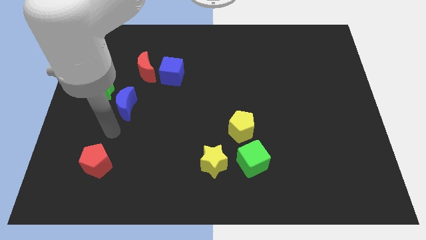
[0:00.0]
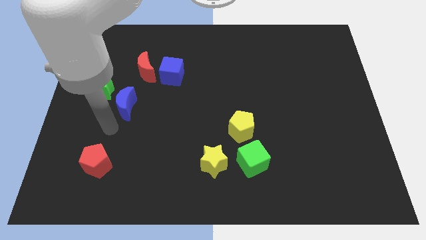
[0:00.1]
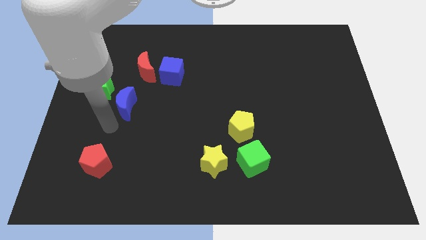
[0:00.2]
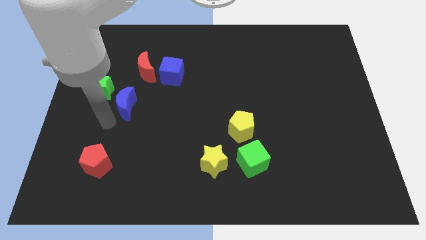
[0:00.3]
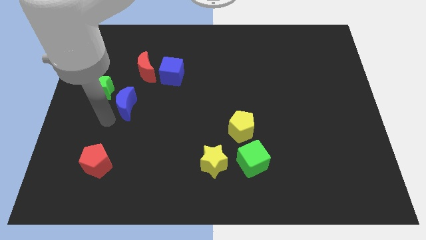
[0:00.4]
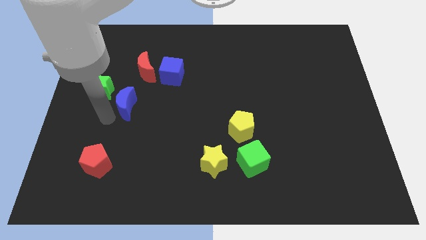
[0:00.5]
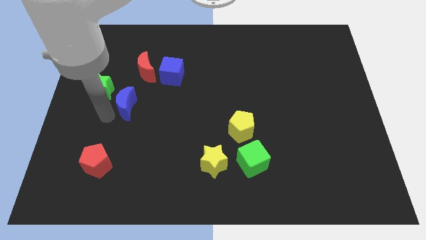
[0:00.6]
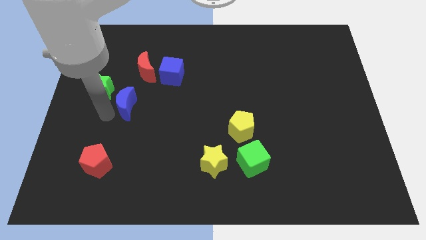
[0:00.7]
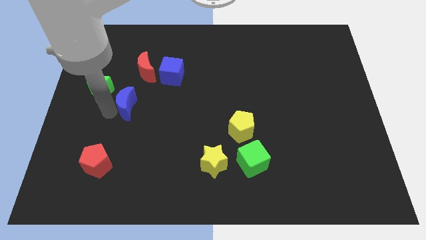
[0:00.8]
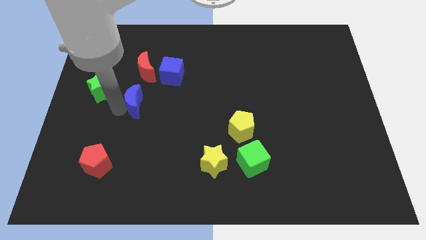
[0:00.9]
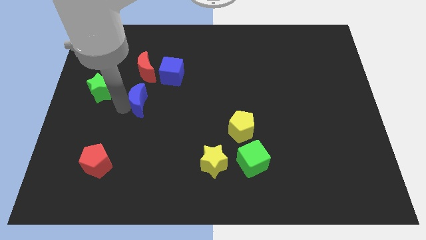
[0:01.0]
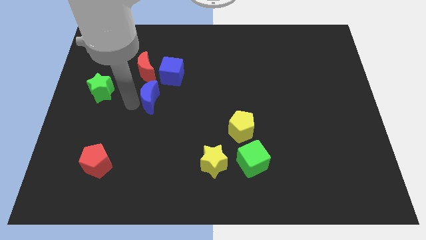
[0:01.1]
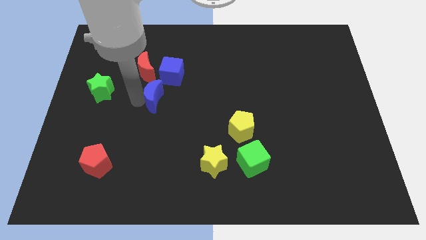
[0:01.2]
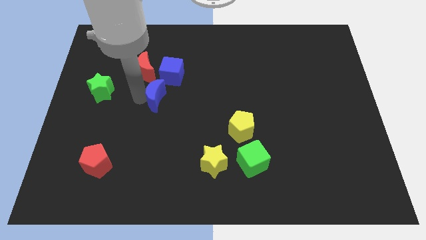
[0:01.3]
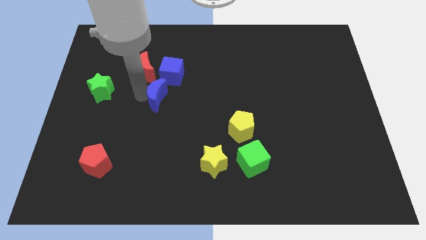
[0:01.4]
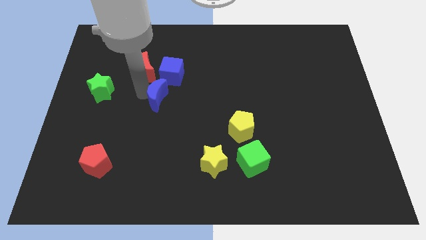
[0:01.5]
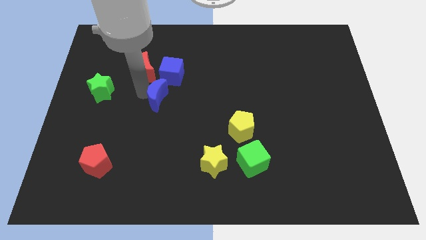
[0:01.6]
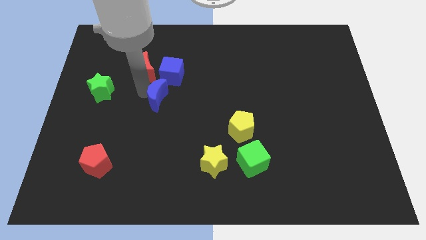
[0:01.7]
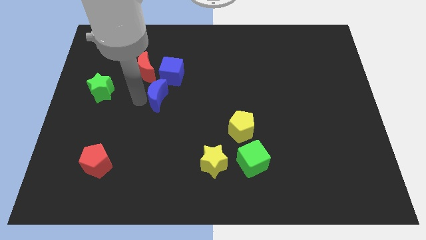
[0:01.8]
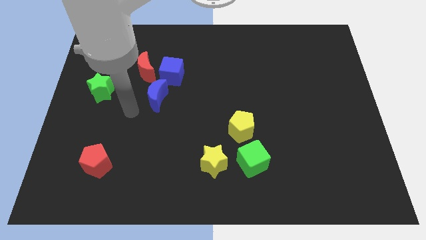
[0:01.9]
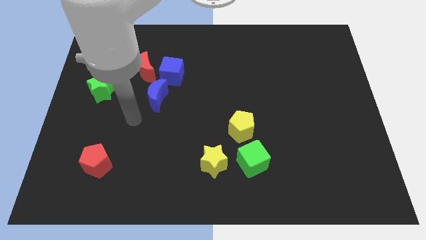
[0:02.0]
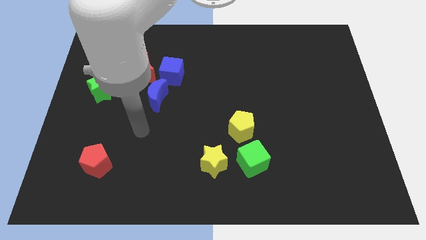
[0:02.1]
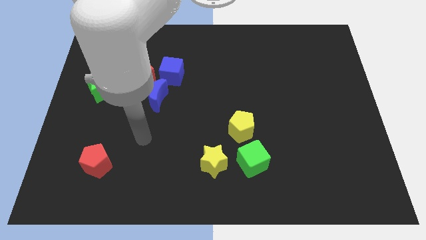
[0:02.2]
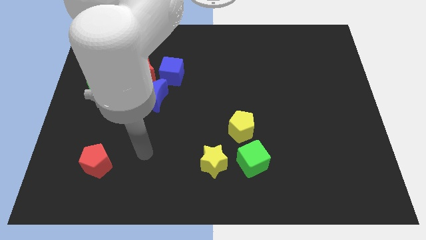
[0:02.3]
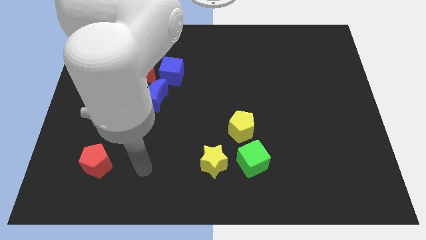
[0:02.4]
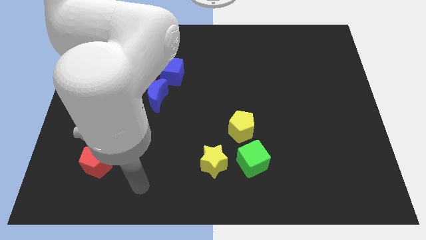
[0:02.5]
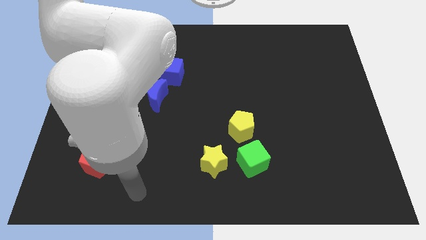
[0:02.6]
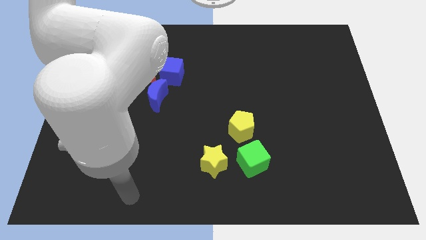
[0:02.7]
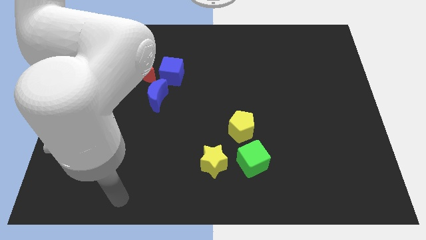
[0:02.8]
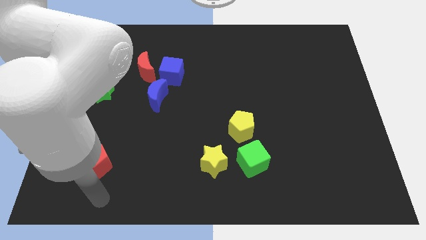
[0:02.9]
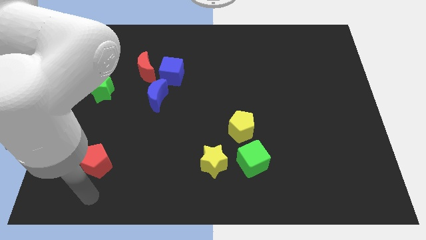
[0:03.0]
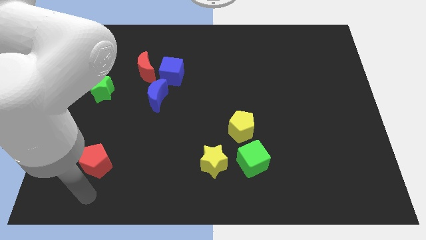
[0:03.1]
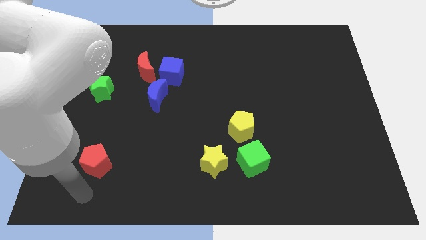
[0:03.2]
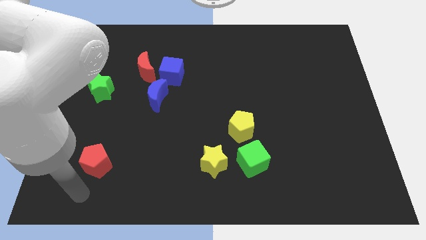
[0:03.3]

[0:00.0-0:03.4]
move your arm below red pentagon

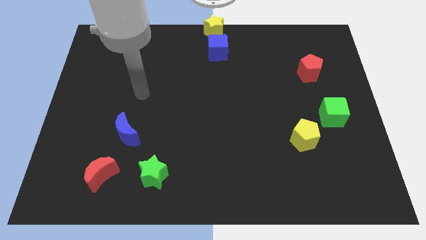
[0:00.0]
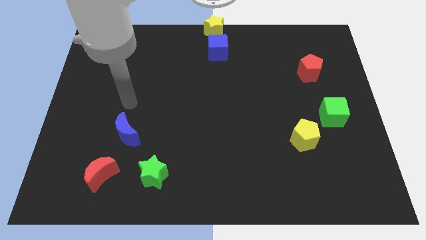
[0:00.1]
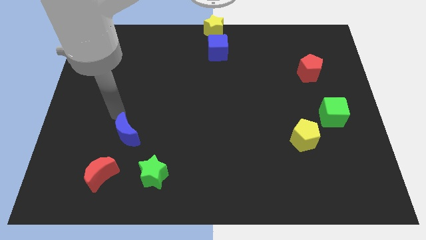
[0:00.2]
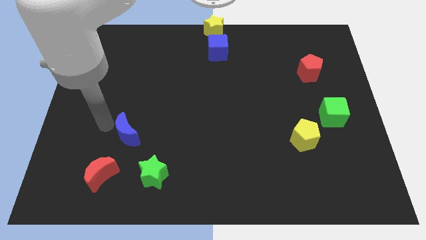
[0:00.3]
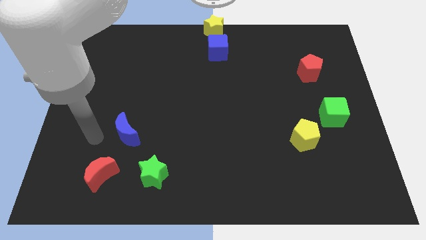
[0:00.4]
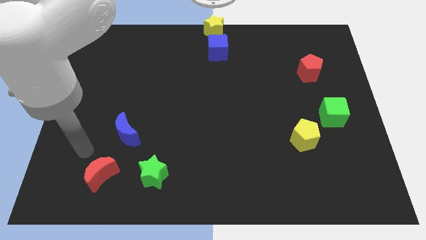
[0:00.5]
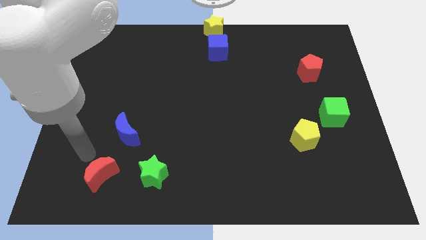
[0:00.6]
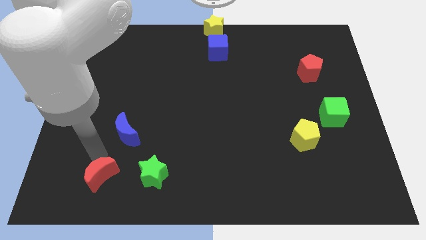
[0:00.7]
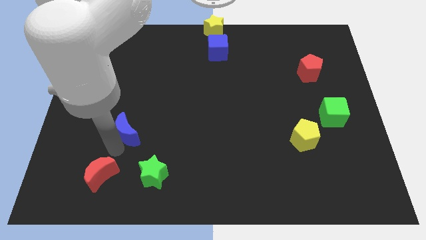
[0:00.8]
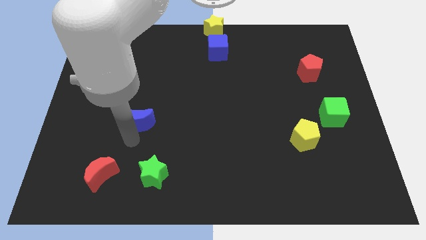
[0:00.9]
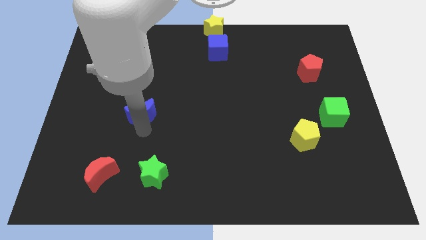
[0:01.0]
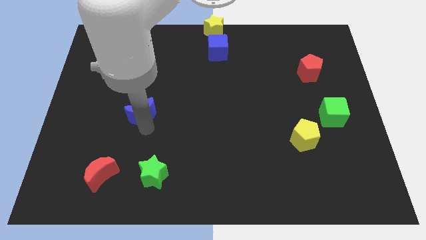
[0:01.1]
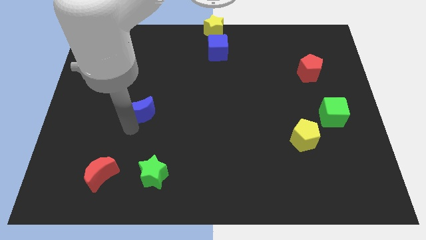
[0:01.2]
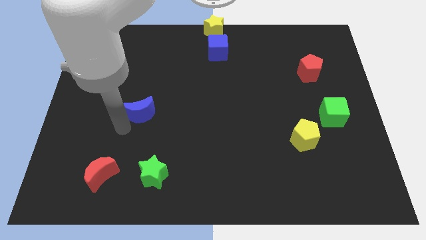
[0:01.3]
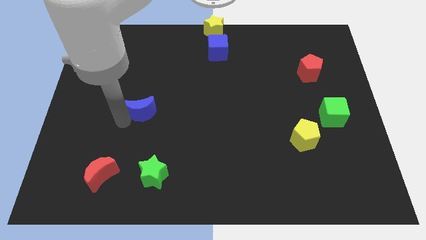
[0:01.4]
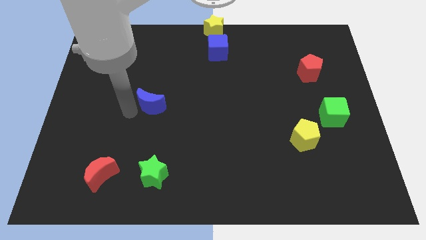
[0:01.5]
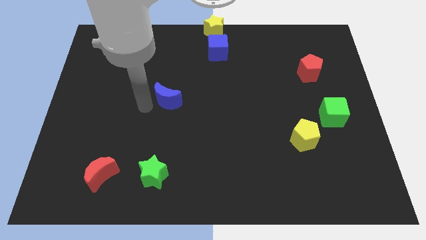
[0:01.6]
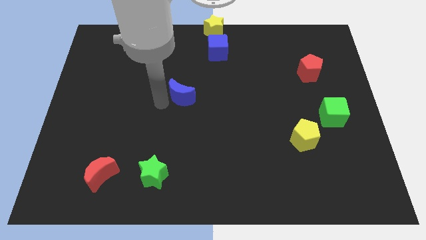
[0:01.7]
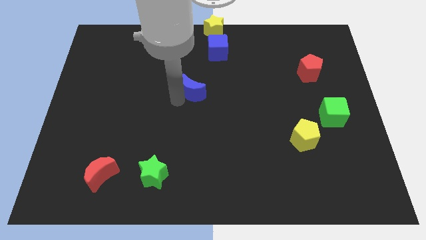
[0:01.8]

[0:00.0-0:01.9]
slide the blue moon towards the blue cube

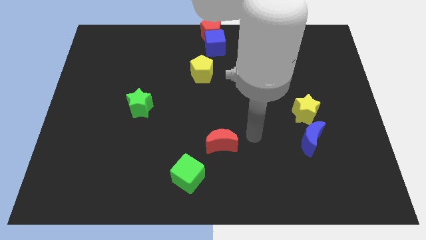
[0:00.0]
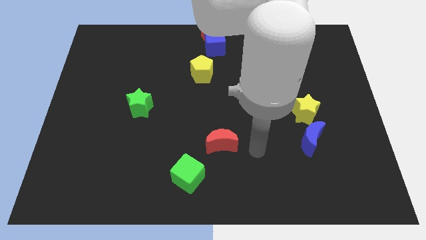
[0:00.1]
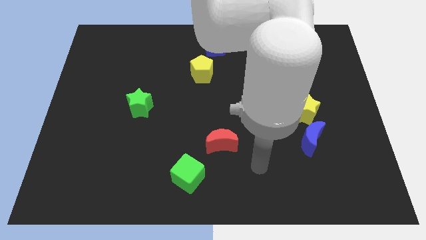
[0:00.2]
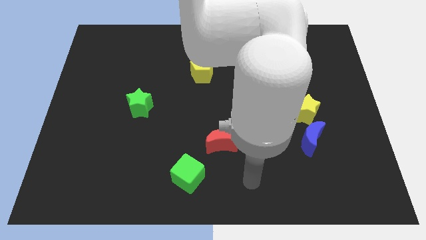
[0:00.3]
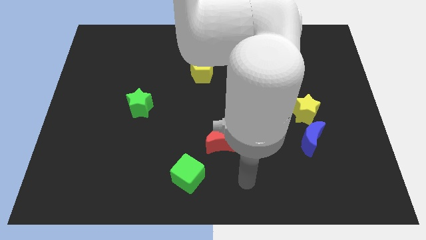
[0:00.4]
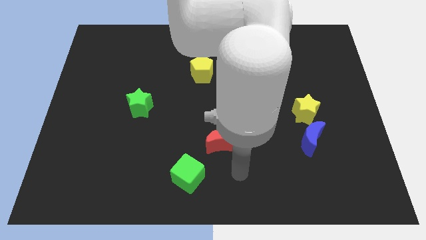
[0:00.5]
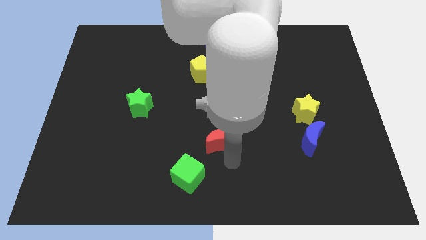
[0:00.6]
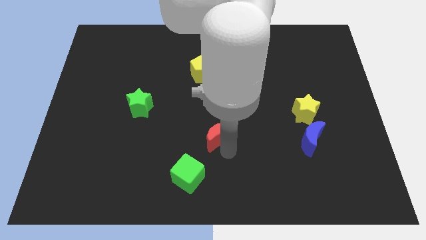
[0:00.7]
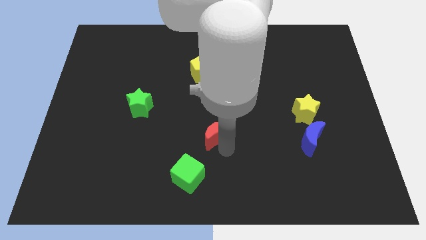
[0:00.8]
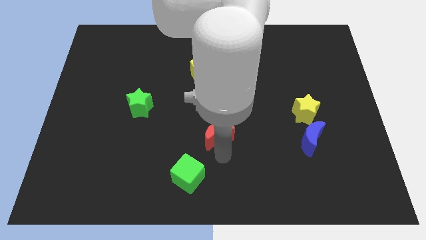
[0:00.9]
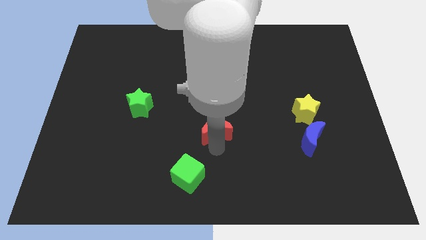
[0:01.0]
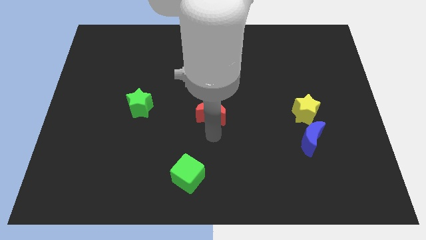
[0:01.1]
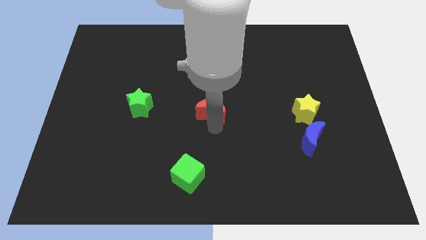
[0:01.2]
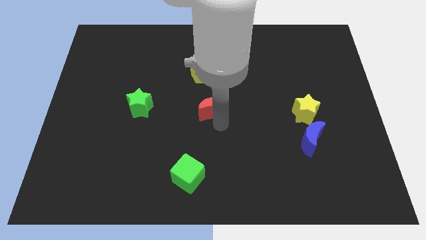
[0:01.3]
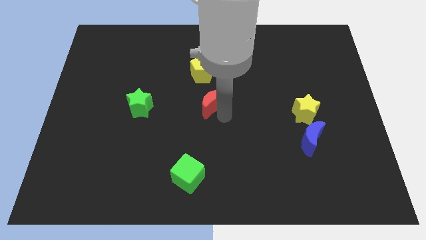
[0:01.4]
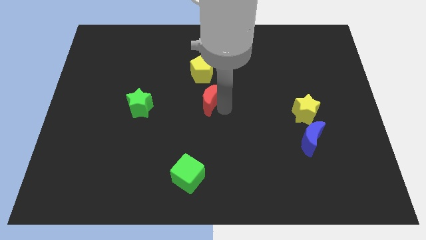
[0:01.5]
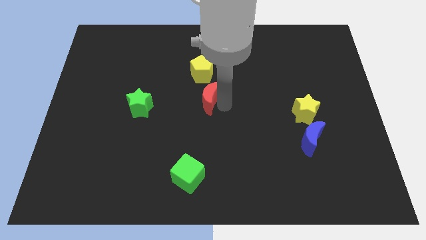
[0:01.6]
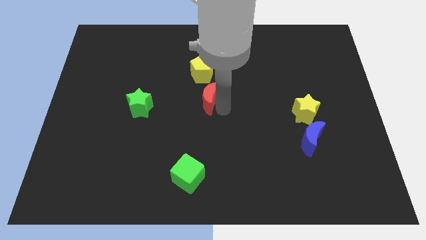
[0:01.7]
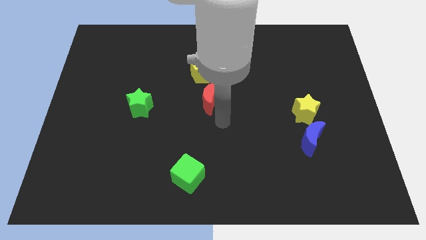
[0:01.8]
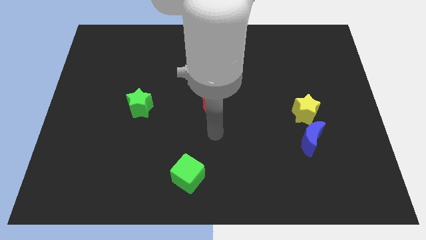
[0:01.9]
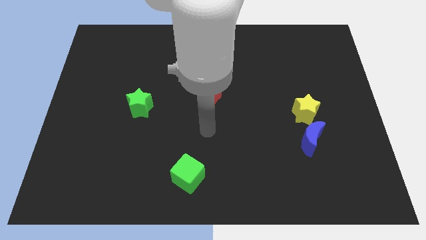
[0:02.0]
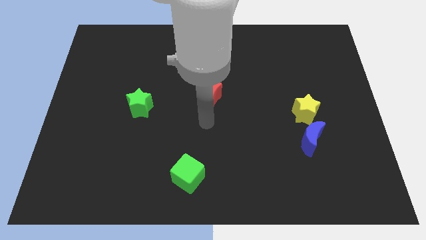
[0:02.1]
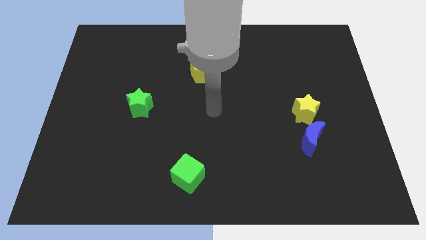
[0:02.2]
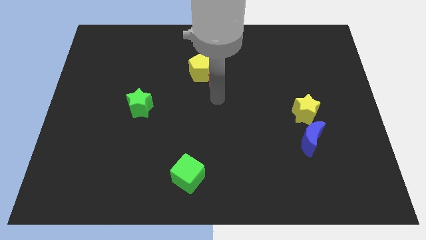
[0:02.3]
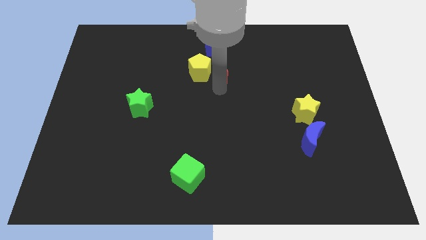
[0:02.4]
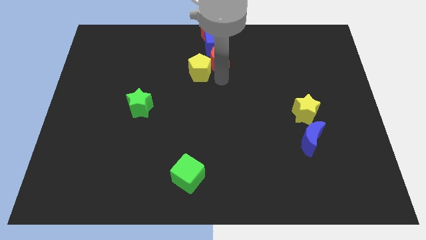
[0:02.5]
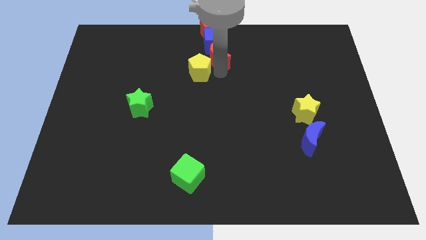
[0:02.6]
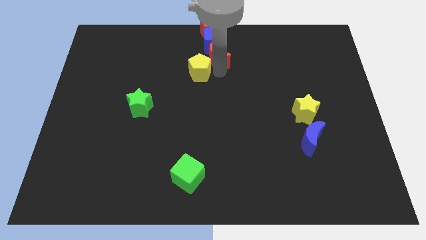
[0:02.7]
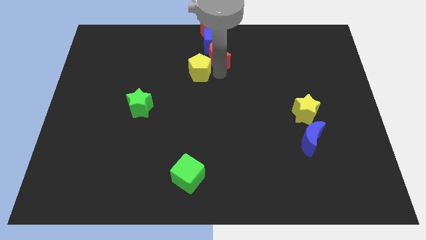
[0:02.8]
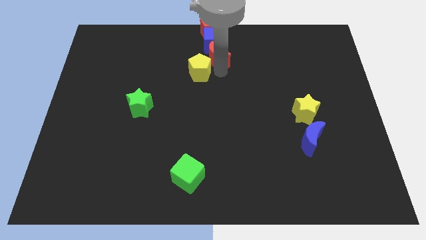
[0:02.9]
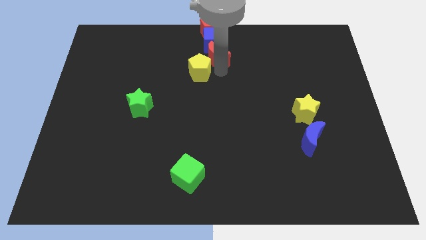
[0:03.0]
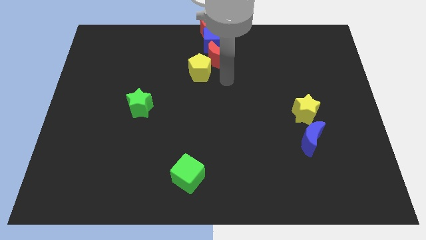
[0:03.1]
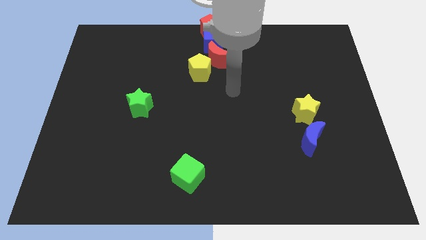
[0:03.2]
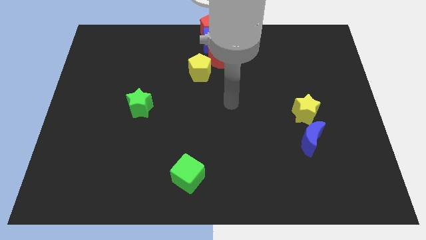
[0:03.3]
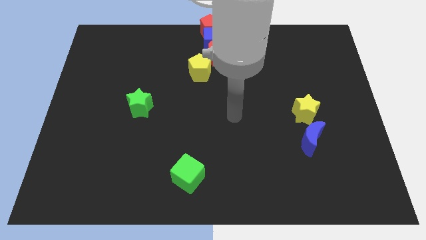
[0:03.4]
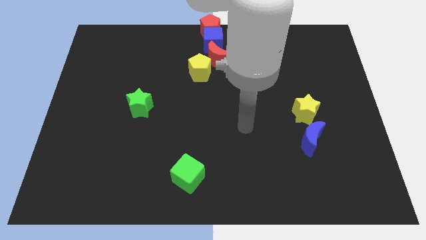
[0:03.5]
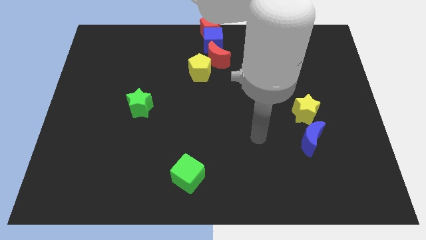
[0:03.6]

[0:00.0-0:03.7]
push the red crescent to the vertical bottom of the blue cube
